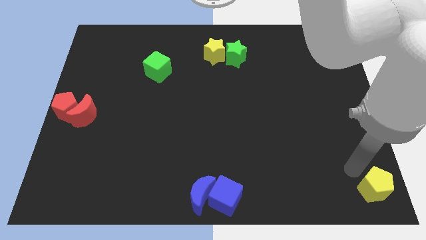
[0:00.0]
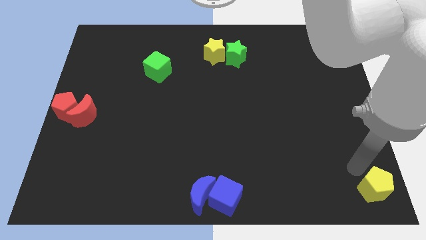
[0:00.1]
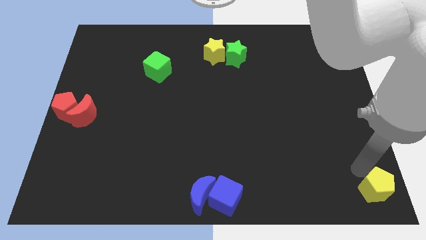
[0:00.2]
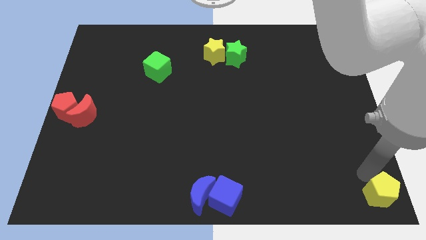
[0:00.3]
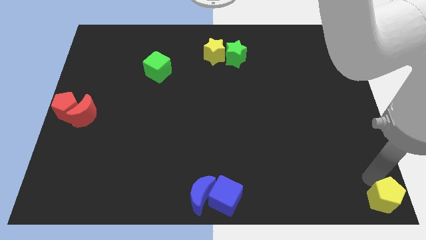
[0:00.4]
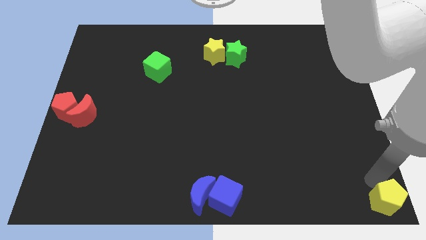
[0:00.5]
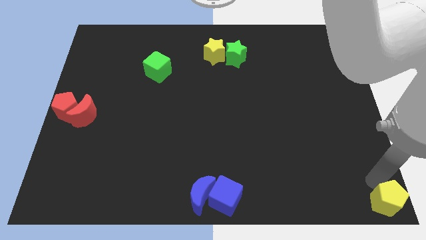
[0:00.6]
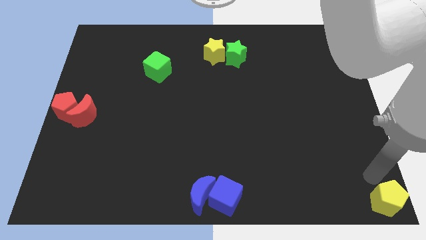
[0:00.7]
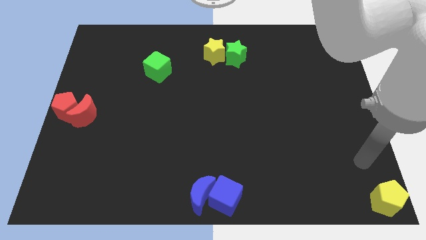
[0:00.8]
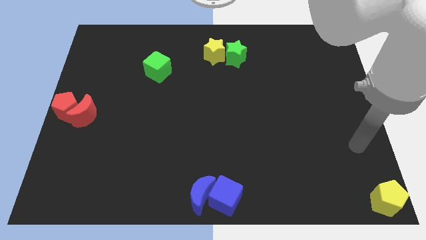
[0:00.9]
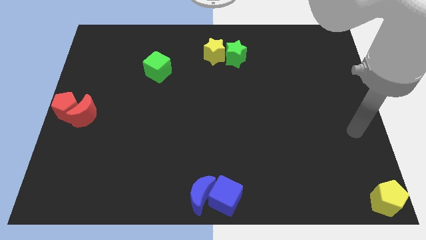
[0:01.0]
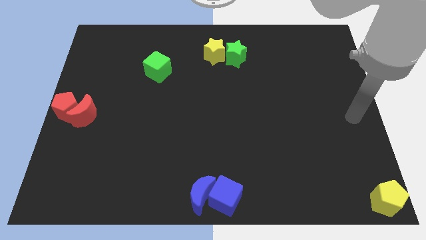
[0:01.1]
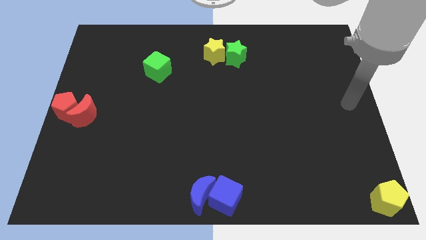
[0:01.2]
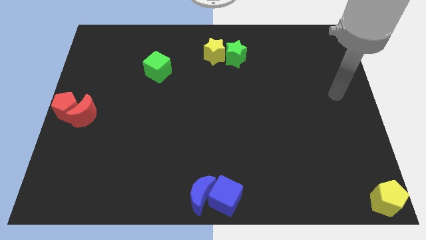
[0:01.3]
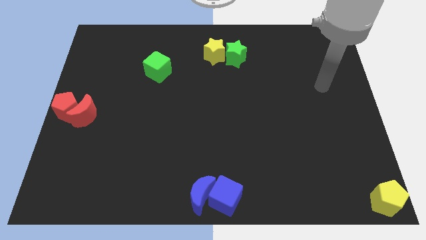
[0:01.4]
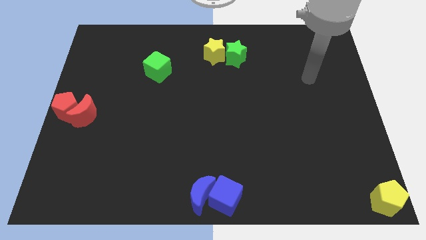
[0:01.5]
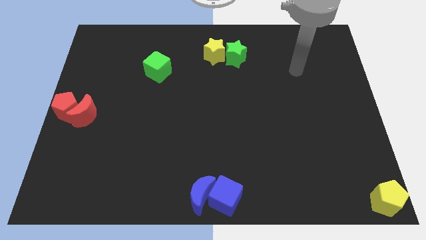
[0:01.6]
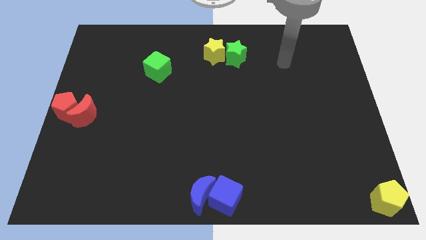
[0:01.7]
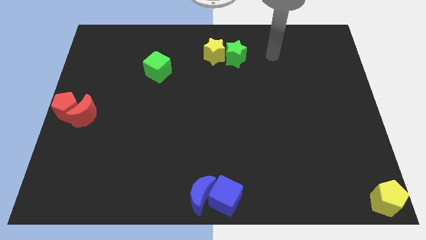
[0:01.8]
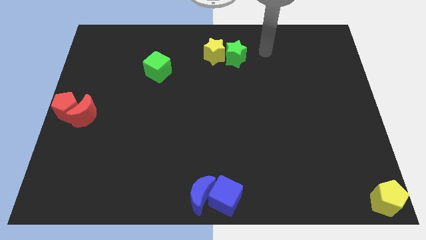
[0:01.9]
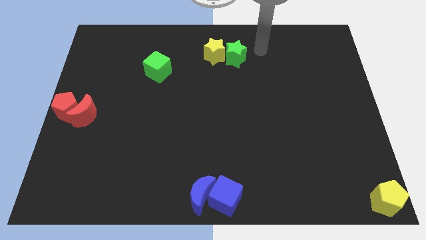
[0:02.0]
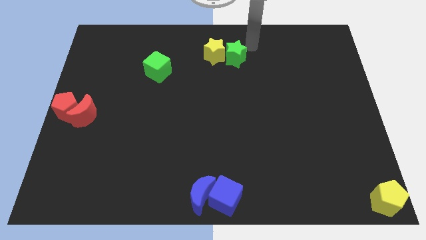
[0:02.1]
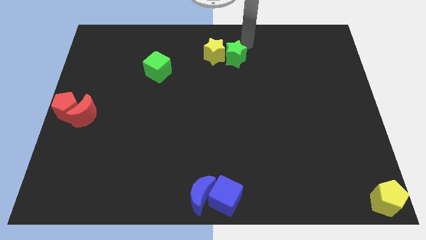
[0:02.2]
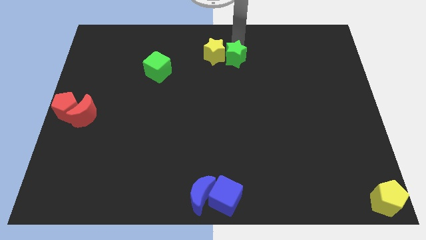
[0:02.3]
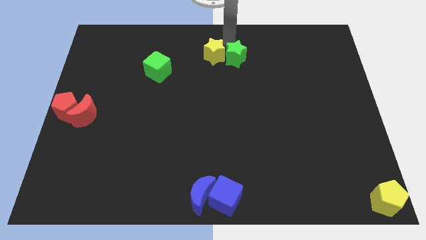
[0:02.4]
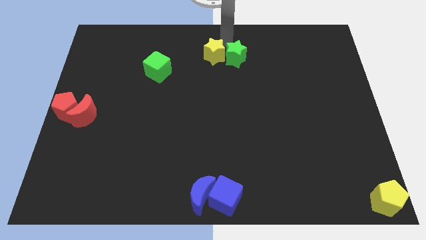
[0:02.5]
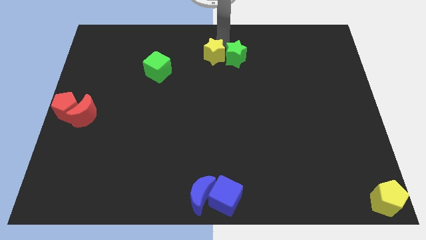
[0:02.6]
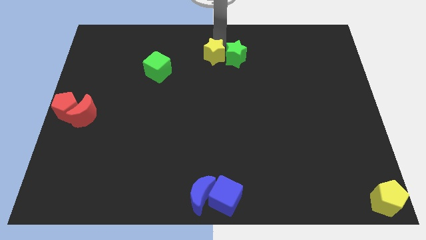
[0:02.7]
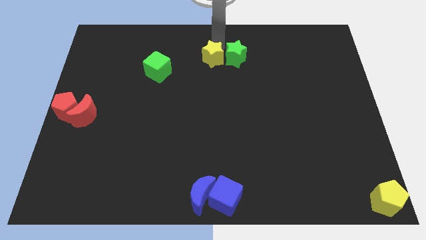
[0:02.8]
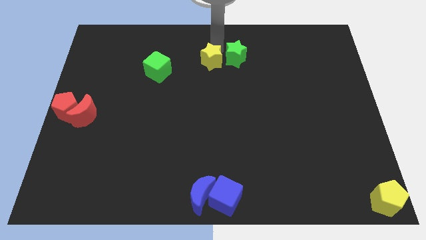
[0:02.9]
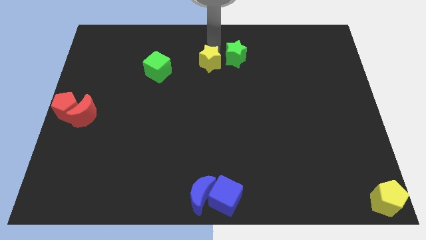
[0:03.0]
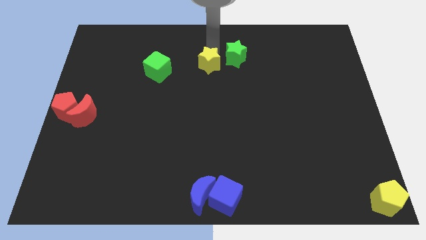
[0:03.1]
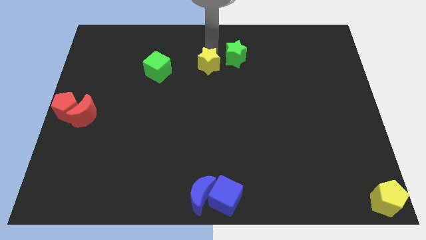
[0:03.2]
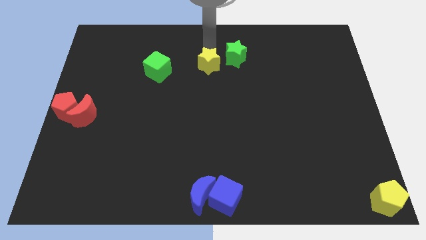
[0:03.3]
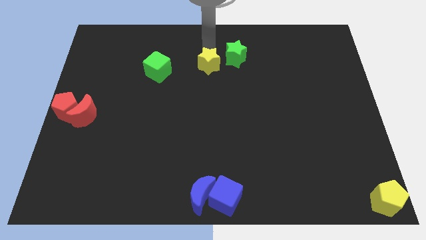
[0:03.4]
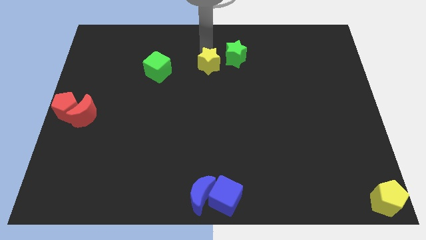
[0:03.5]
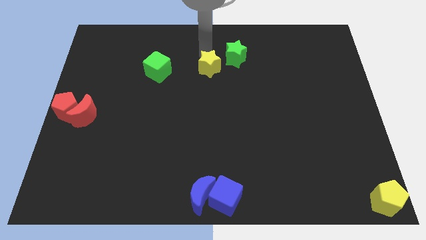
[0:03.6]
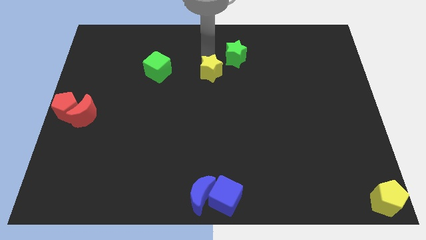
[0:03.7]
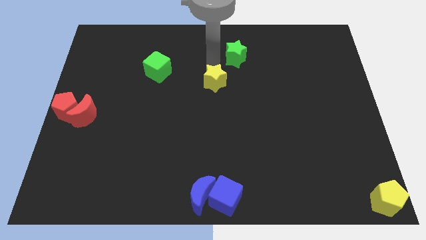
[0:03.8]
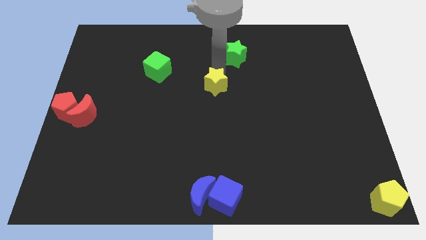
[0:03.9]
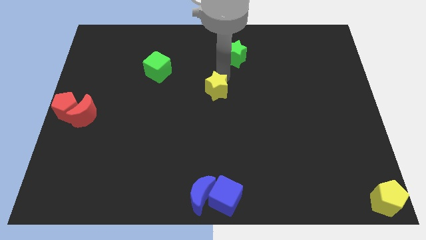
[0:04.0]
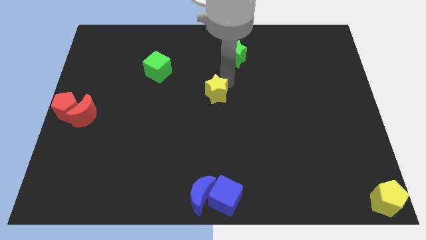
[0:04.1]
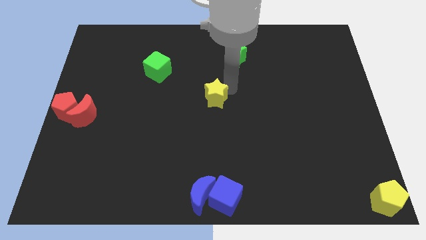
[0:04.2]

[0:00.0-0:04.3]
separate yellow star from green star

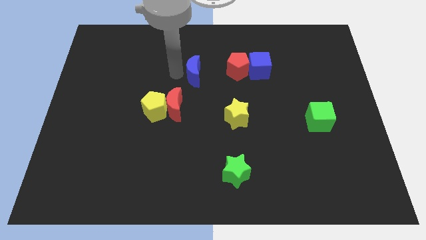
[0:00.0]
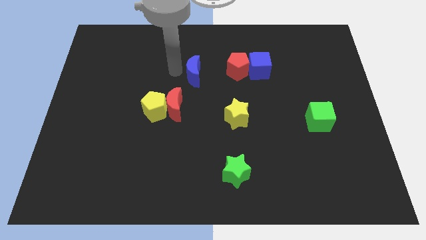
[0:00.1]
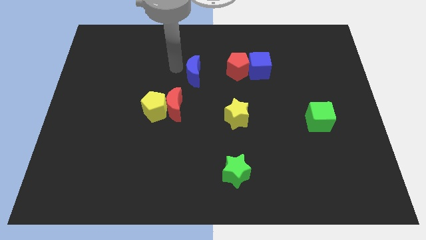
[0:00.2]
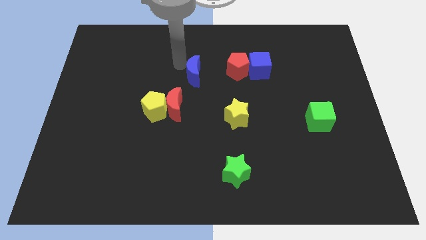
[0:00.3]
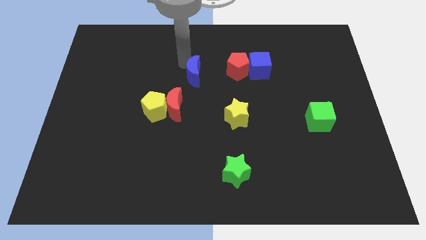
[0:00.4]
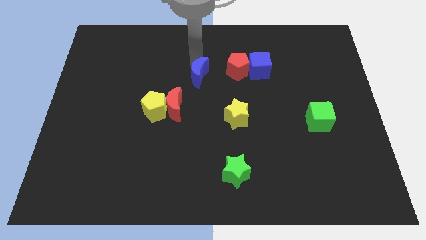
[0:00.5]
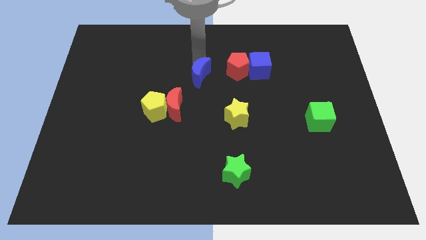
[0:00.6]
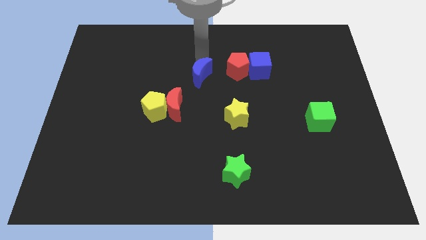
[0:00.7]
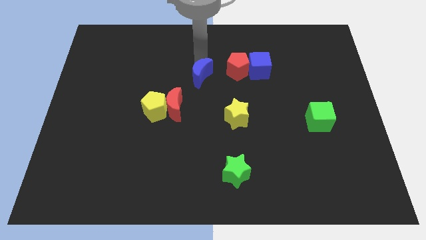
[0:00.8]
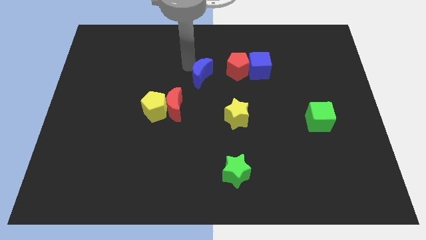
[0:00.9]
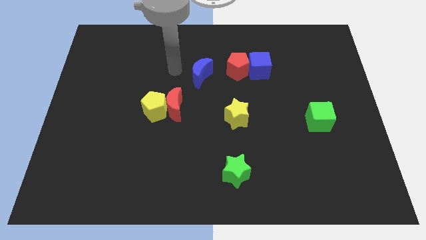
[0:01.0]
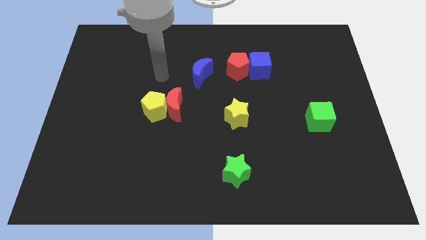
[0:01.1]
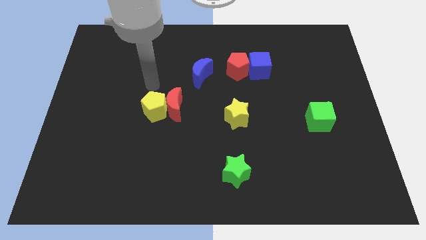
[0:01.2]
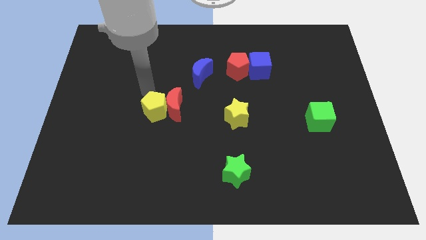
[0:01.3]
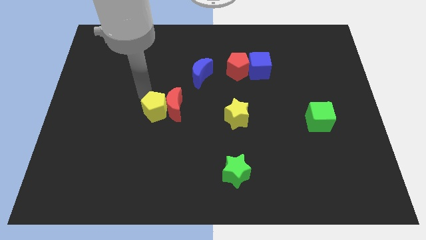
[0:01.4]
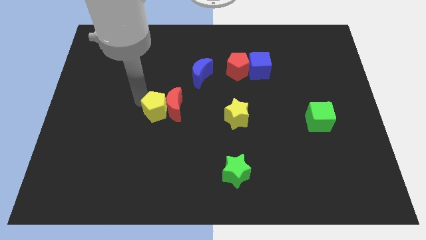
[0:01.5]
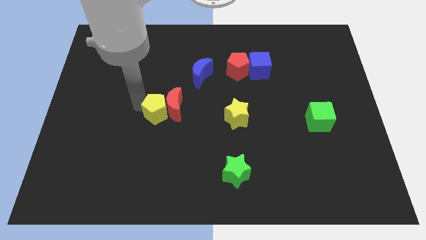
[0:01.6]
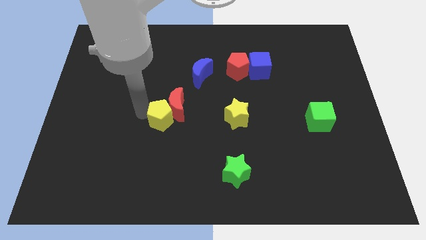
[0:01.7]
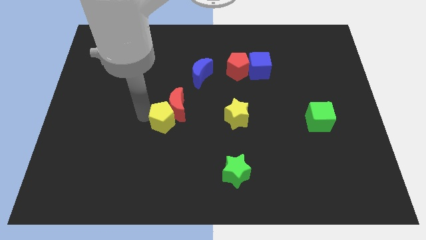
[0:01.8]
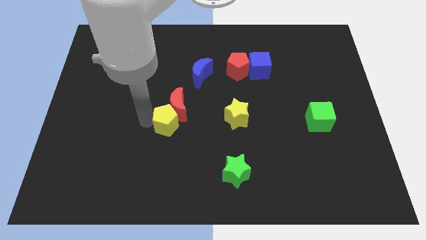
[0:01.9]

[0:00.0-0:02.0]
move your arm away from blue crescent

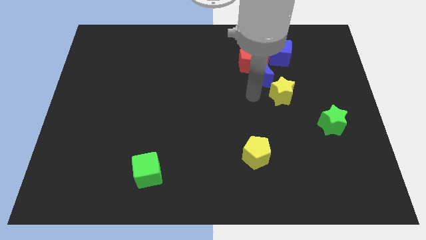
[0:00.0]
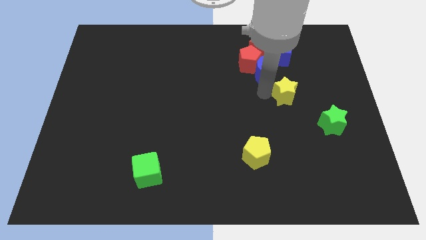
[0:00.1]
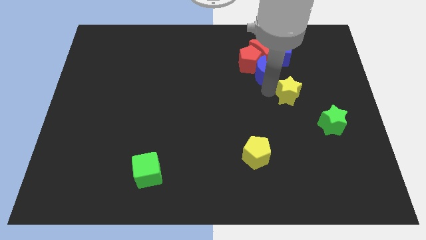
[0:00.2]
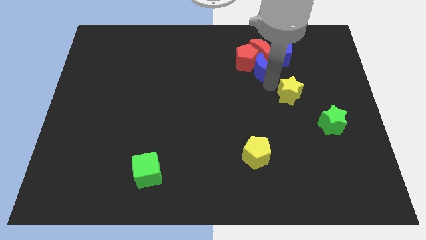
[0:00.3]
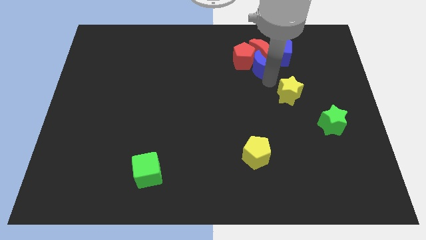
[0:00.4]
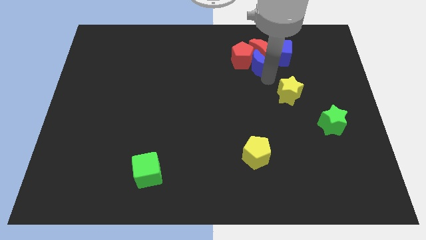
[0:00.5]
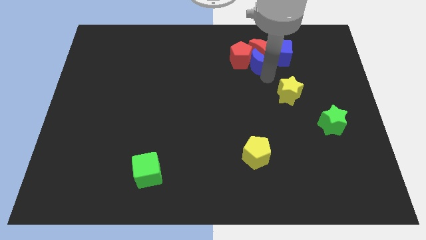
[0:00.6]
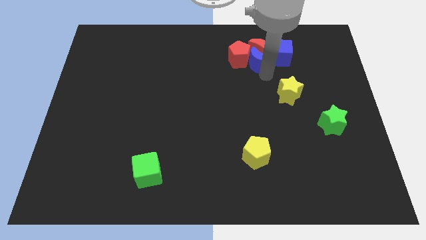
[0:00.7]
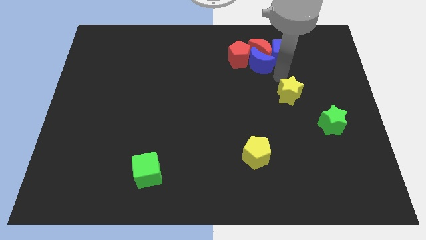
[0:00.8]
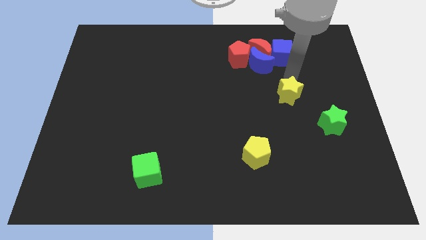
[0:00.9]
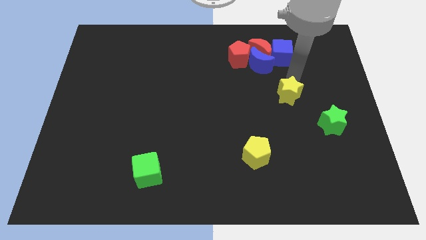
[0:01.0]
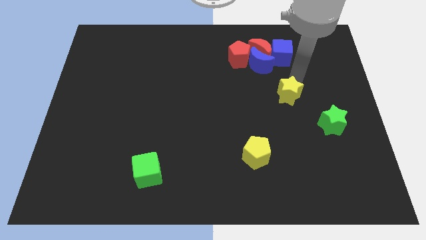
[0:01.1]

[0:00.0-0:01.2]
push the blue crescent into the red crescent from the bottom

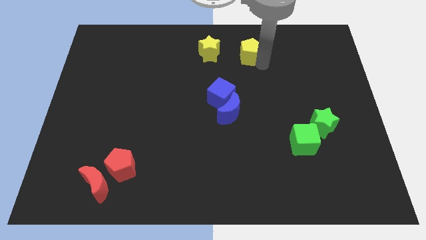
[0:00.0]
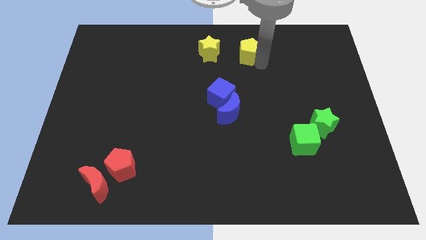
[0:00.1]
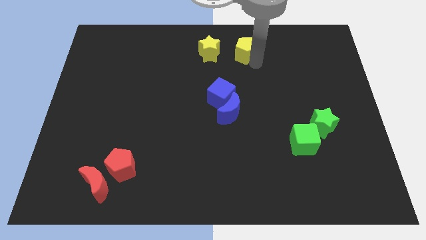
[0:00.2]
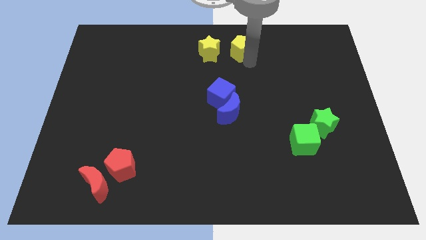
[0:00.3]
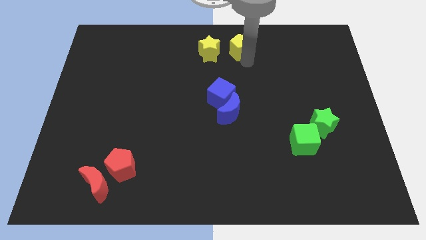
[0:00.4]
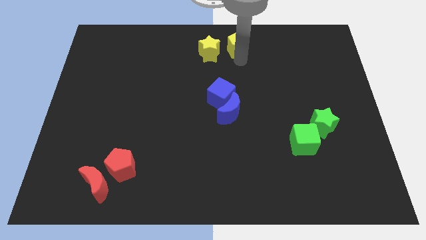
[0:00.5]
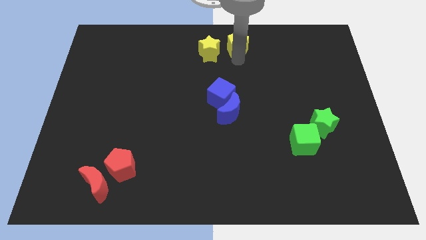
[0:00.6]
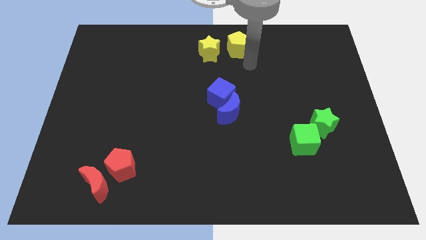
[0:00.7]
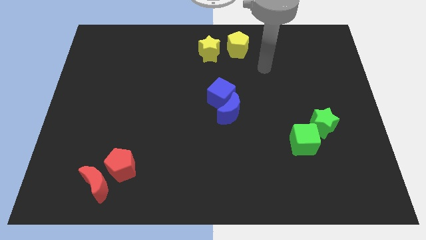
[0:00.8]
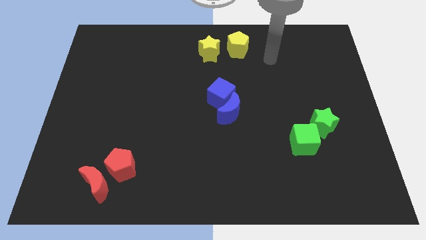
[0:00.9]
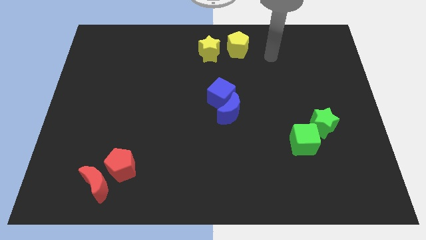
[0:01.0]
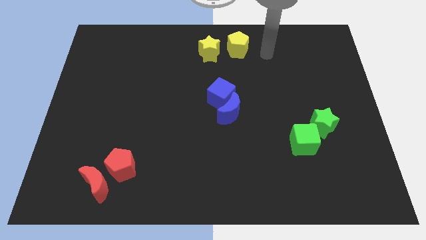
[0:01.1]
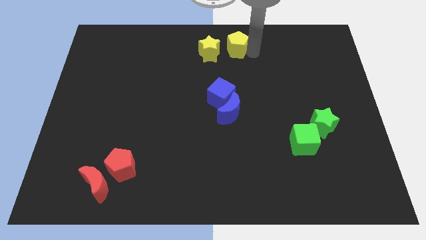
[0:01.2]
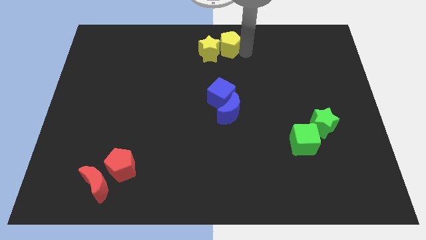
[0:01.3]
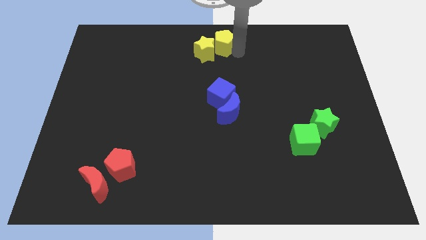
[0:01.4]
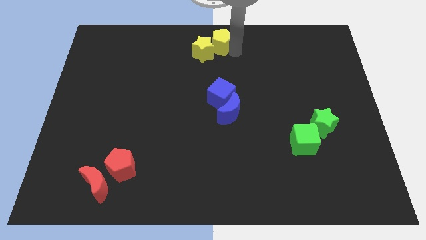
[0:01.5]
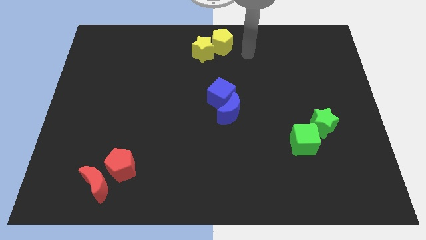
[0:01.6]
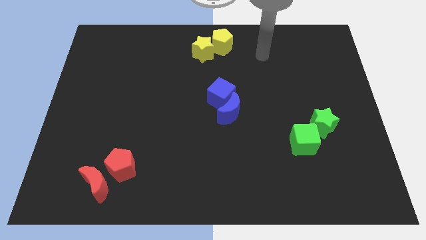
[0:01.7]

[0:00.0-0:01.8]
place both the yellow blocks at the top center of the board
